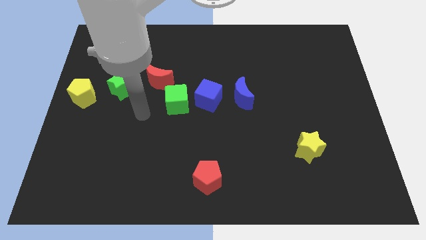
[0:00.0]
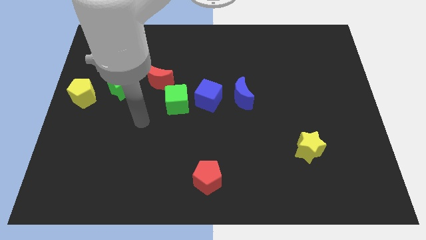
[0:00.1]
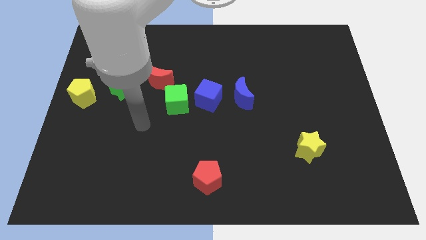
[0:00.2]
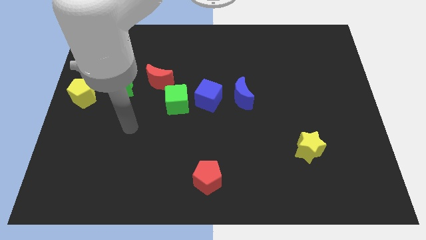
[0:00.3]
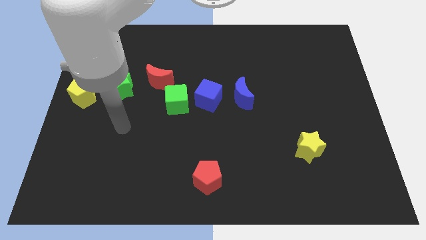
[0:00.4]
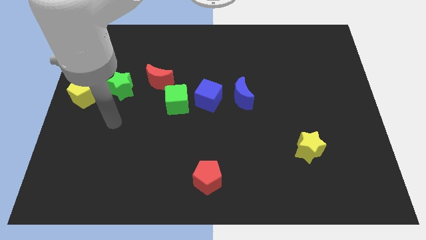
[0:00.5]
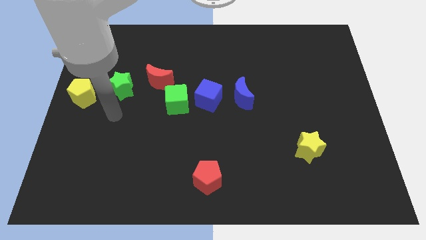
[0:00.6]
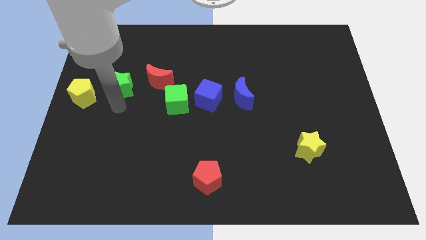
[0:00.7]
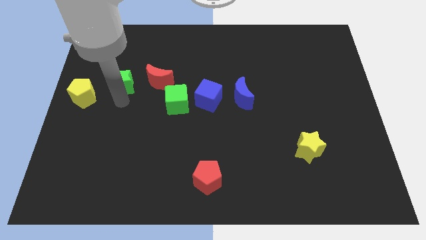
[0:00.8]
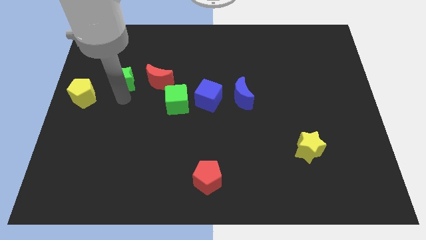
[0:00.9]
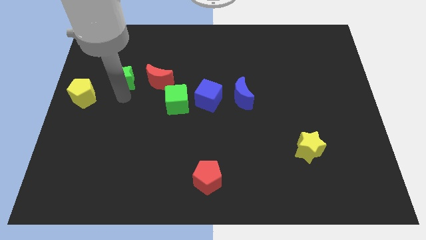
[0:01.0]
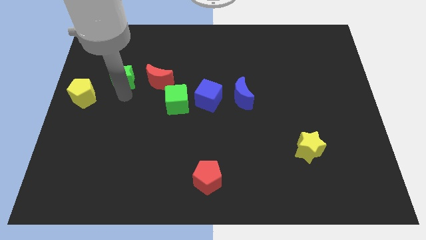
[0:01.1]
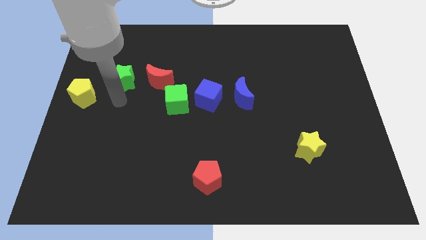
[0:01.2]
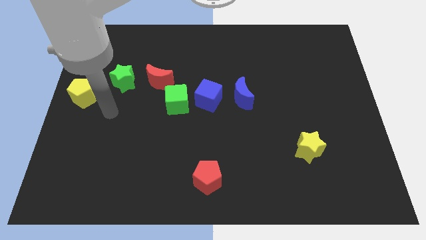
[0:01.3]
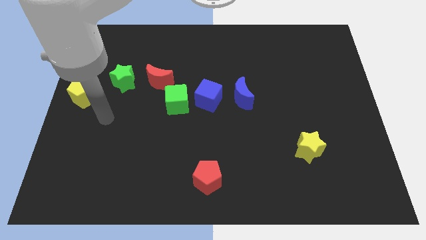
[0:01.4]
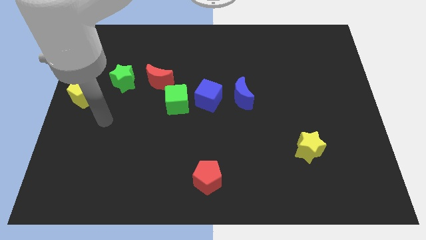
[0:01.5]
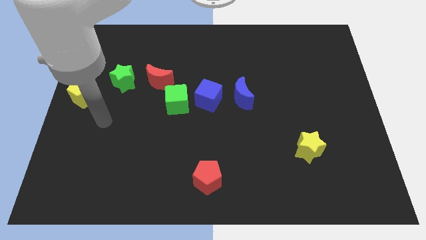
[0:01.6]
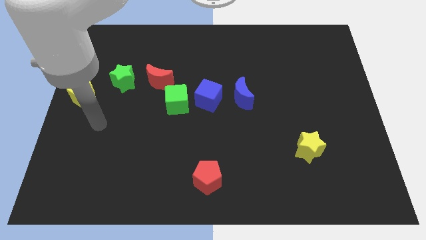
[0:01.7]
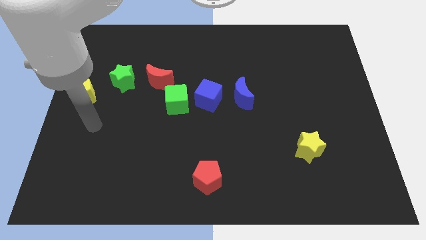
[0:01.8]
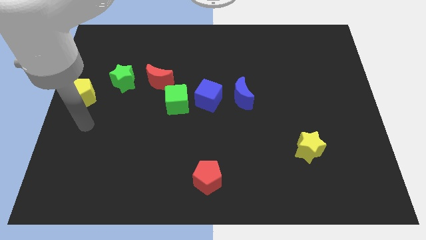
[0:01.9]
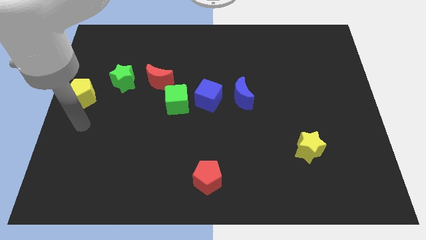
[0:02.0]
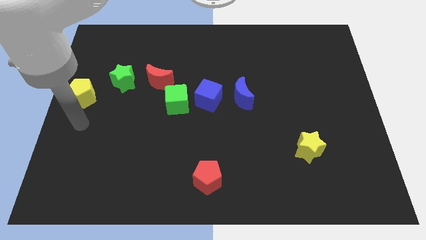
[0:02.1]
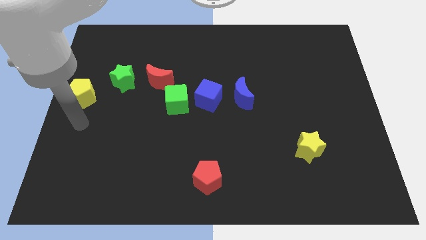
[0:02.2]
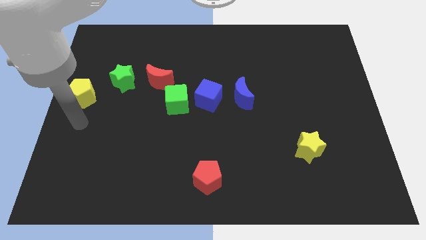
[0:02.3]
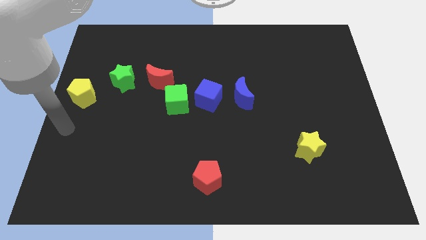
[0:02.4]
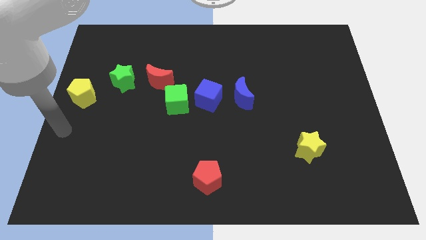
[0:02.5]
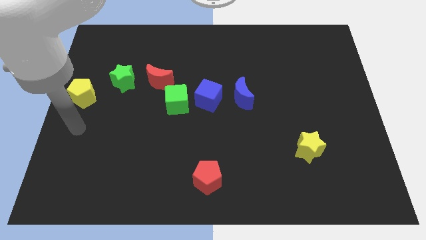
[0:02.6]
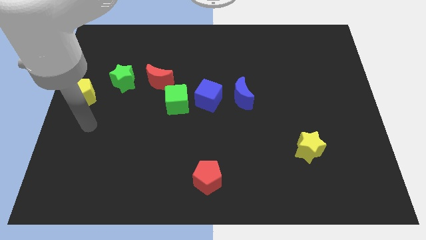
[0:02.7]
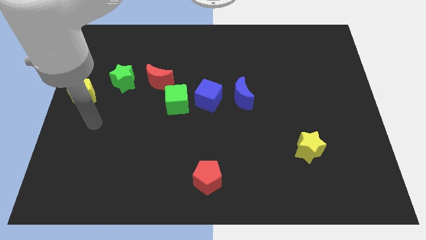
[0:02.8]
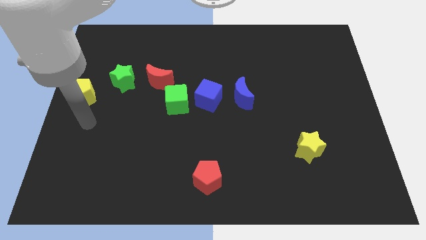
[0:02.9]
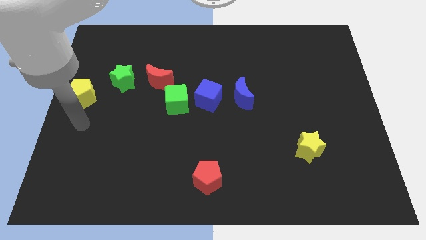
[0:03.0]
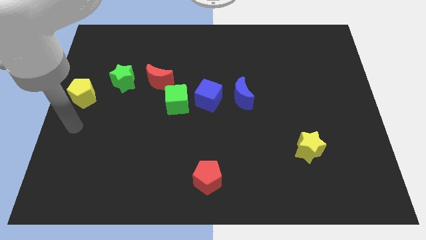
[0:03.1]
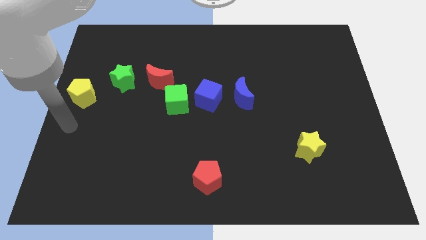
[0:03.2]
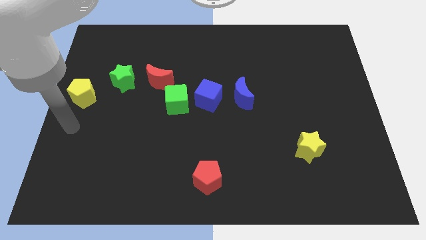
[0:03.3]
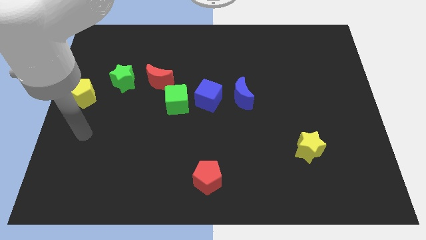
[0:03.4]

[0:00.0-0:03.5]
place the green star to the left of the red crescent

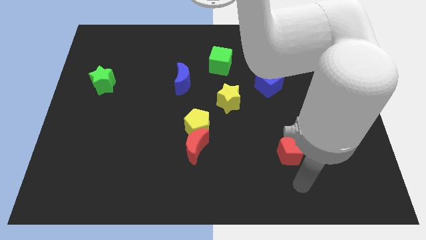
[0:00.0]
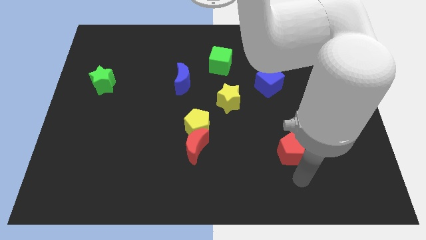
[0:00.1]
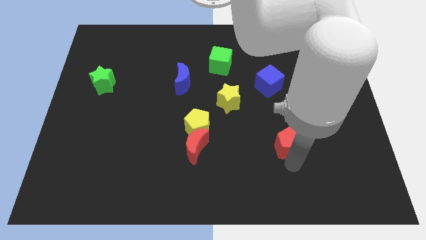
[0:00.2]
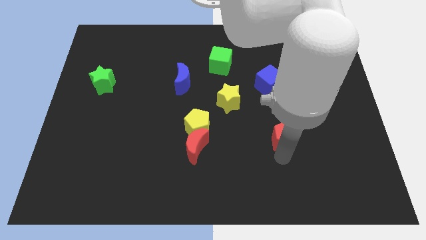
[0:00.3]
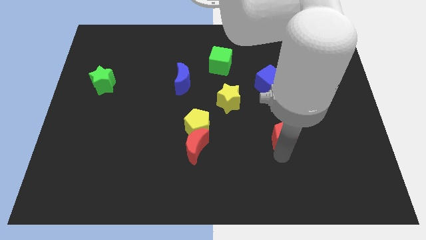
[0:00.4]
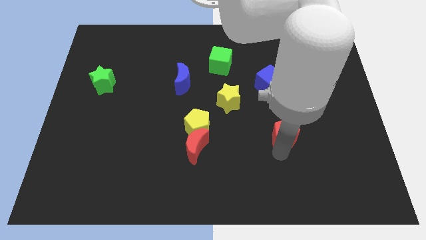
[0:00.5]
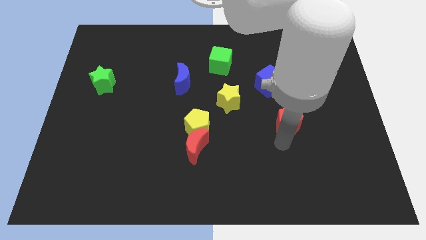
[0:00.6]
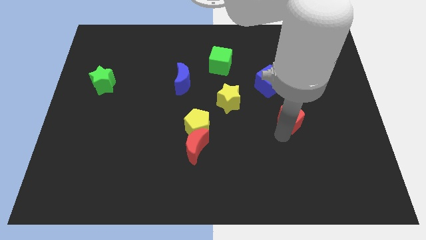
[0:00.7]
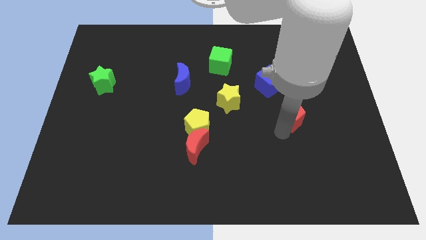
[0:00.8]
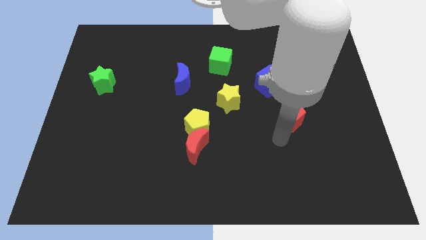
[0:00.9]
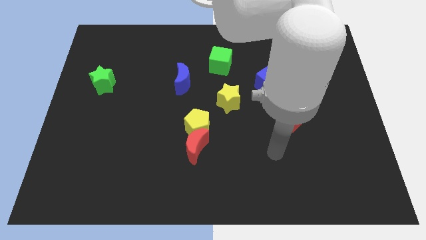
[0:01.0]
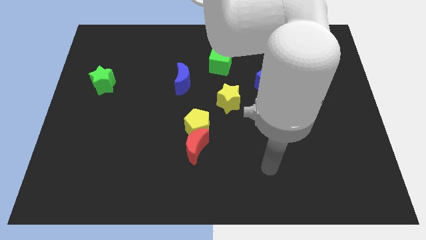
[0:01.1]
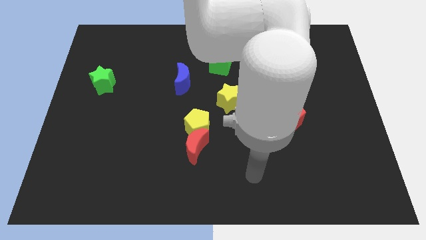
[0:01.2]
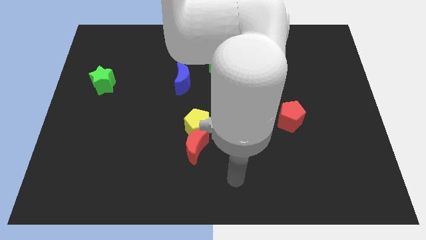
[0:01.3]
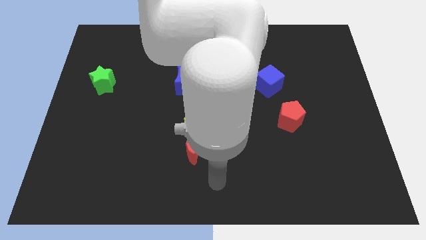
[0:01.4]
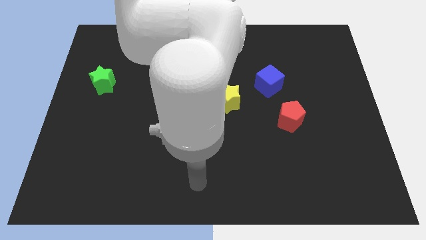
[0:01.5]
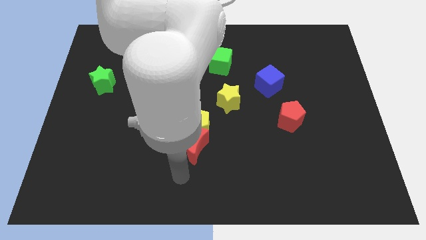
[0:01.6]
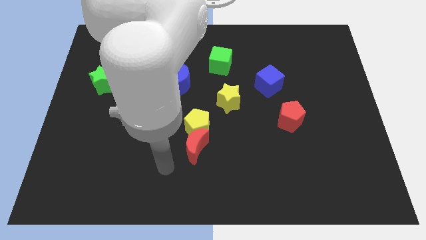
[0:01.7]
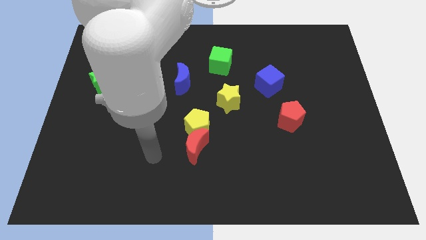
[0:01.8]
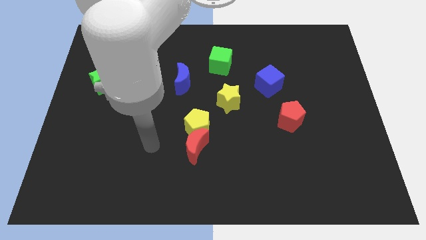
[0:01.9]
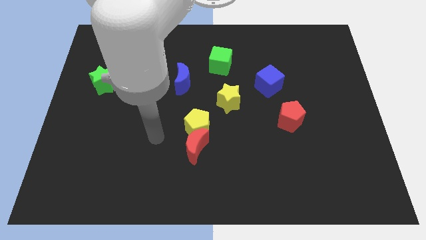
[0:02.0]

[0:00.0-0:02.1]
move the red pentagon slightly up

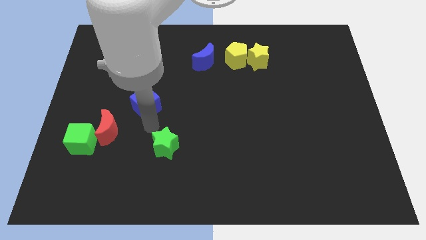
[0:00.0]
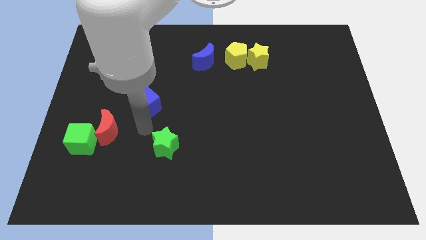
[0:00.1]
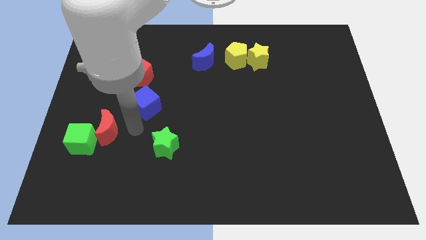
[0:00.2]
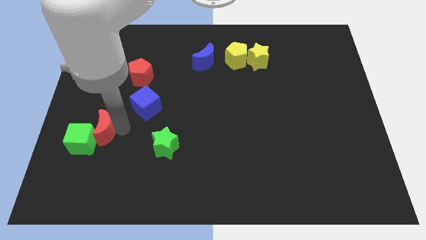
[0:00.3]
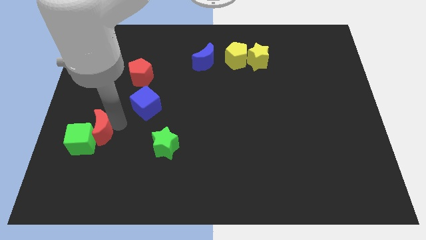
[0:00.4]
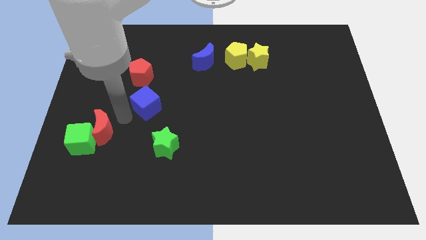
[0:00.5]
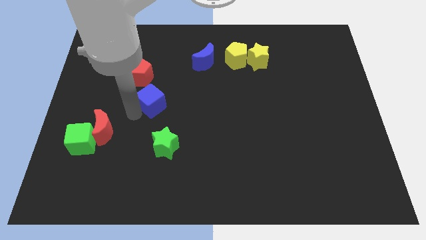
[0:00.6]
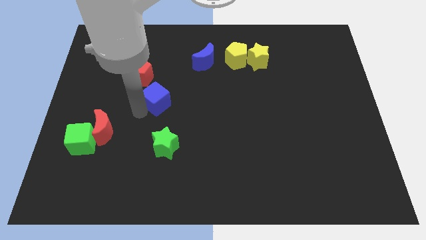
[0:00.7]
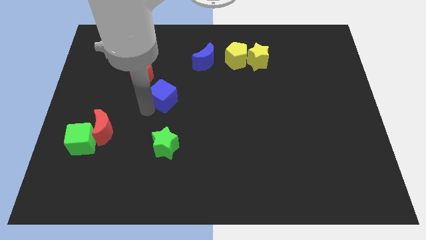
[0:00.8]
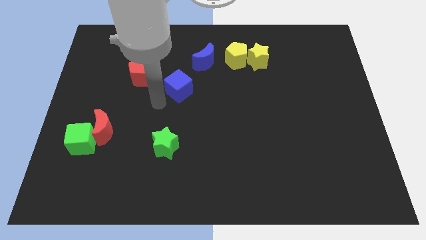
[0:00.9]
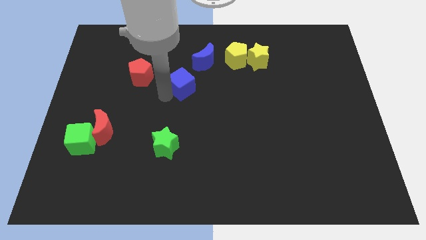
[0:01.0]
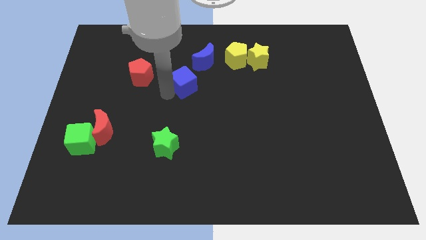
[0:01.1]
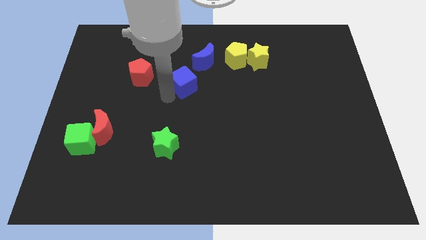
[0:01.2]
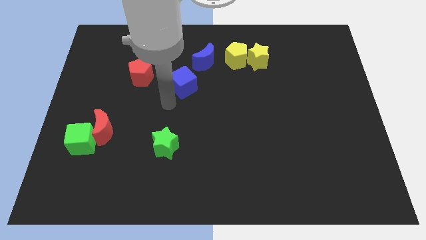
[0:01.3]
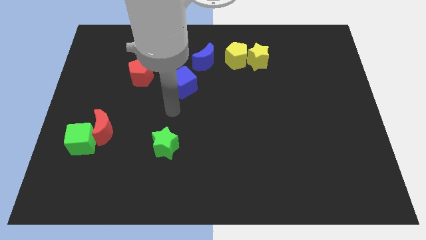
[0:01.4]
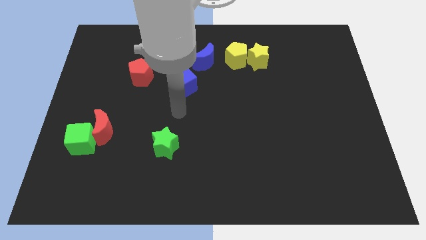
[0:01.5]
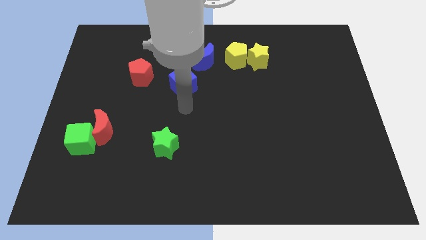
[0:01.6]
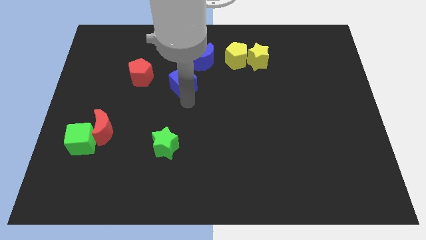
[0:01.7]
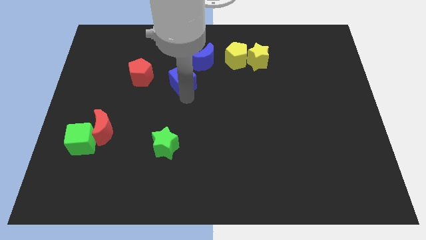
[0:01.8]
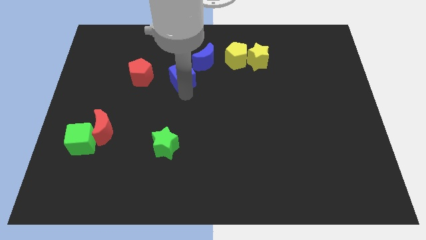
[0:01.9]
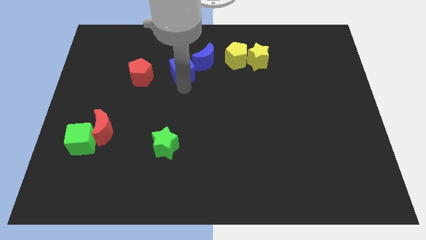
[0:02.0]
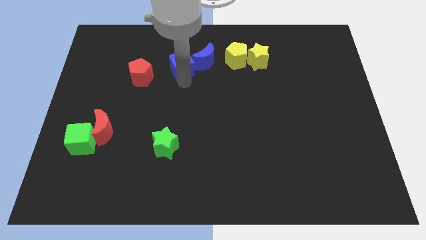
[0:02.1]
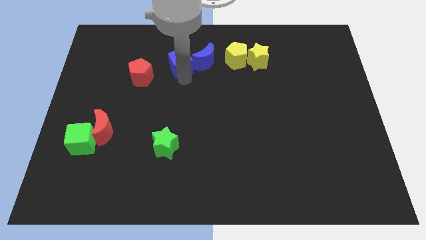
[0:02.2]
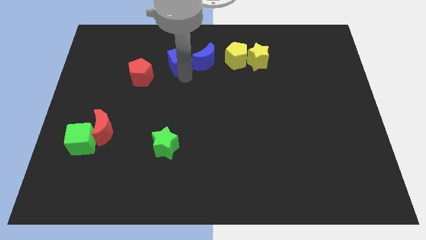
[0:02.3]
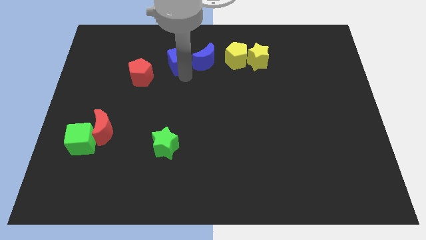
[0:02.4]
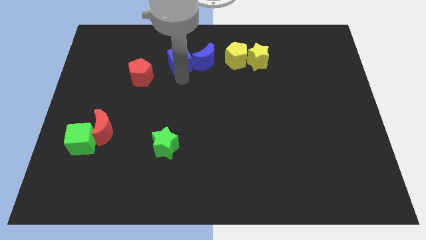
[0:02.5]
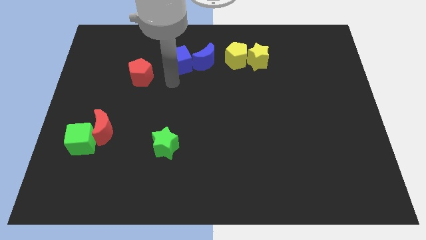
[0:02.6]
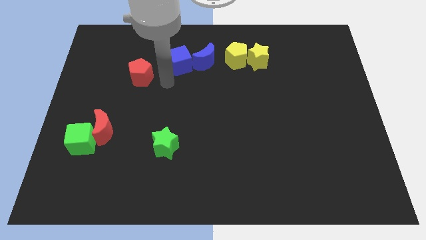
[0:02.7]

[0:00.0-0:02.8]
place the blue cube left to the blue moon

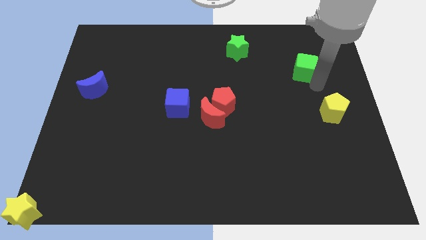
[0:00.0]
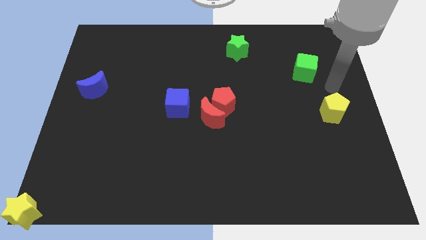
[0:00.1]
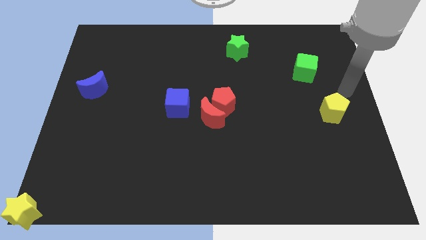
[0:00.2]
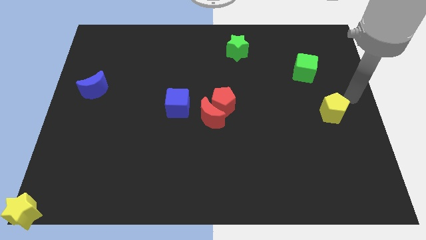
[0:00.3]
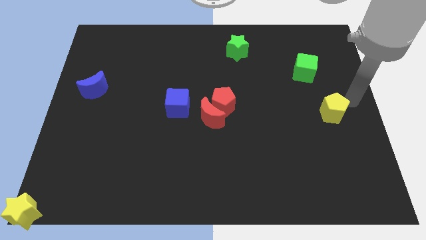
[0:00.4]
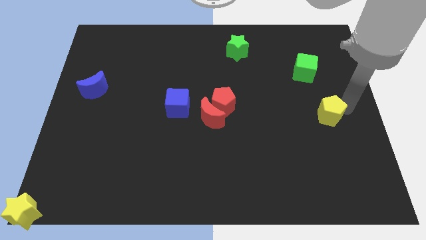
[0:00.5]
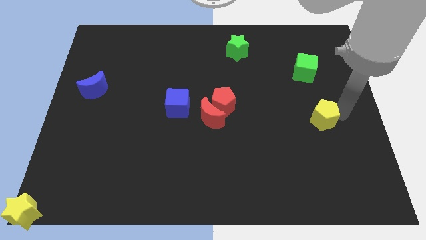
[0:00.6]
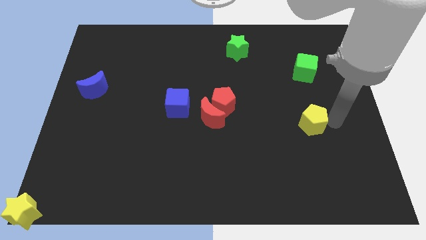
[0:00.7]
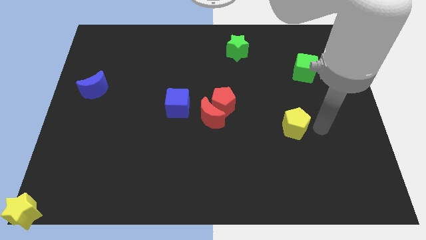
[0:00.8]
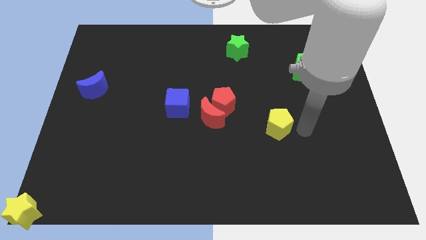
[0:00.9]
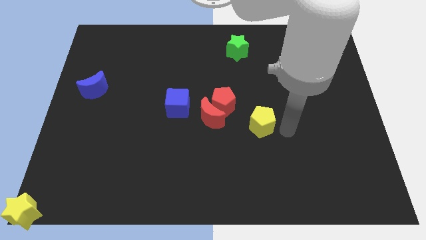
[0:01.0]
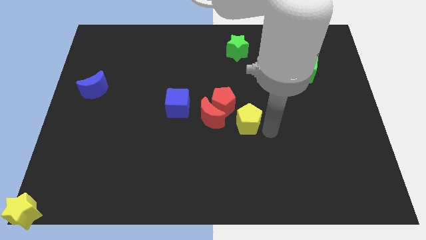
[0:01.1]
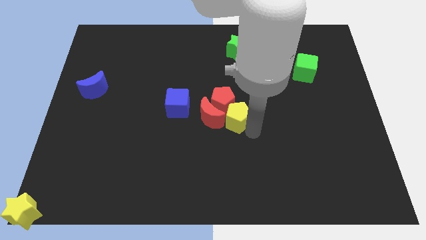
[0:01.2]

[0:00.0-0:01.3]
move yellow pentagon right beside the red blocks
